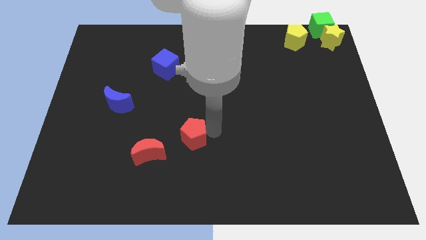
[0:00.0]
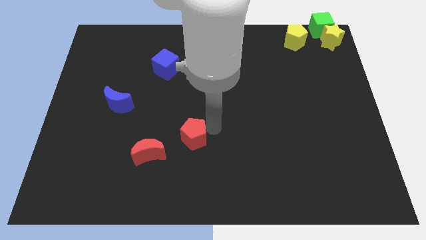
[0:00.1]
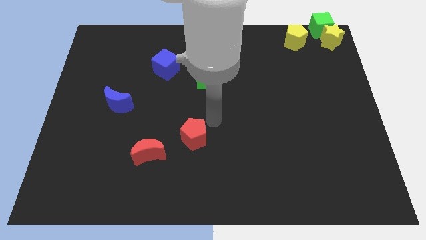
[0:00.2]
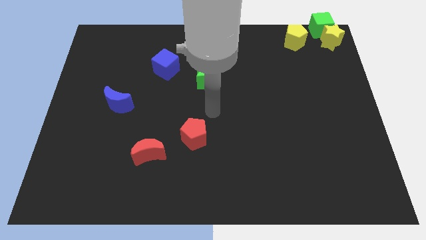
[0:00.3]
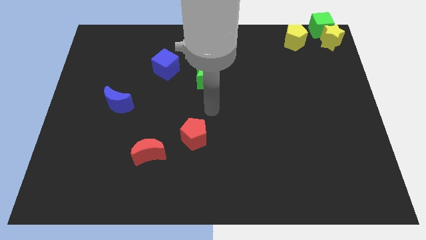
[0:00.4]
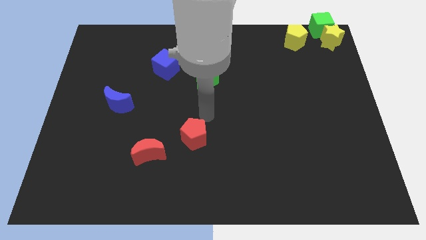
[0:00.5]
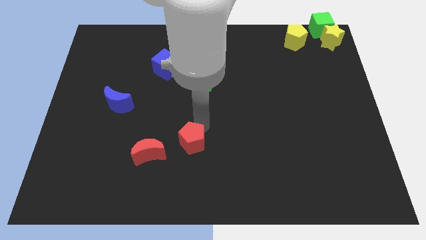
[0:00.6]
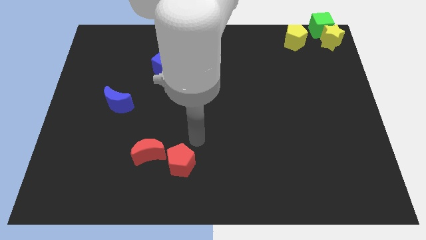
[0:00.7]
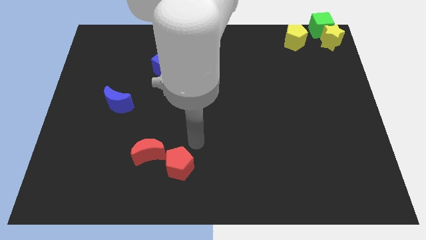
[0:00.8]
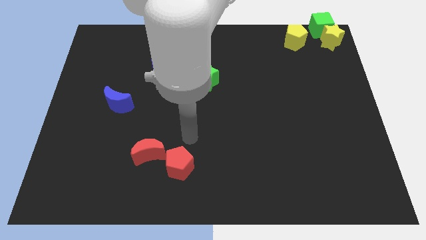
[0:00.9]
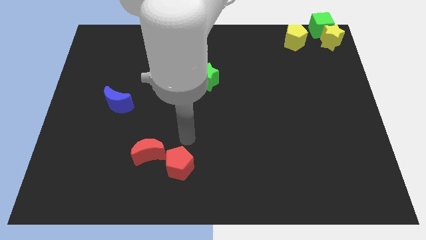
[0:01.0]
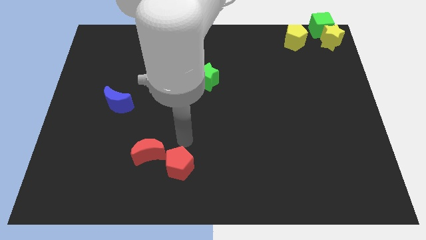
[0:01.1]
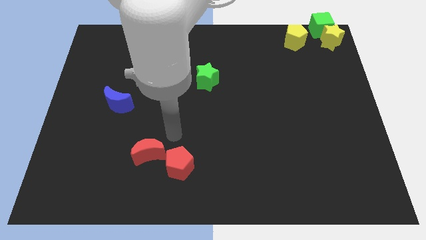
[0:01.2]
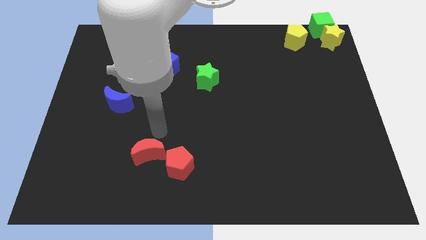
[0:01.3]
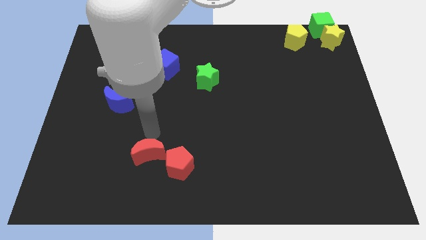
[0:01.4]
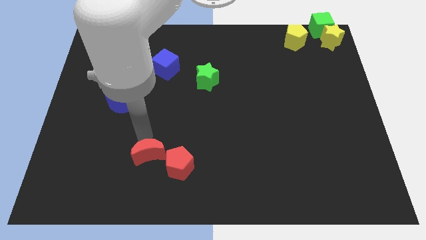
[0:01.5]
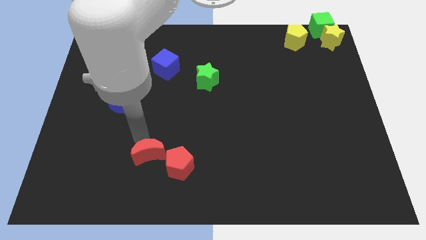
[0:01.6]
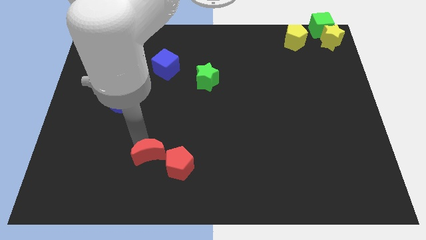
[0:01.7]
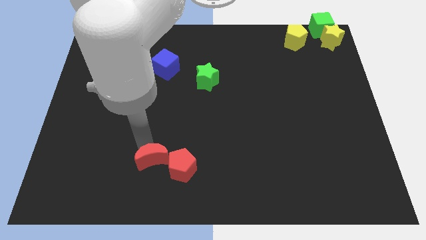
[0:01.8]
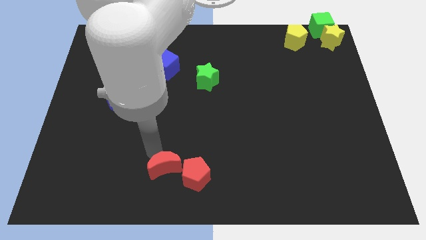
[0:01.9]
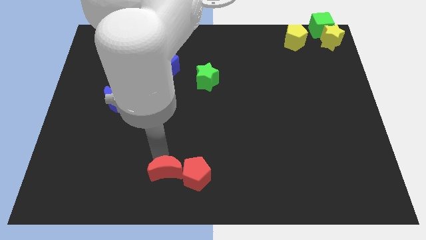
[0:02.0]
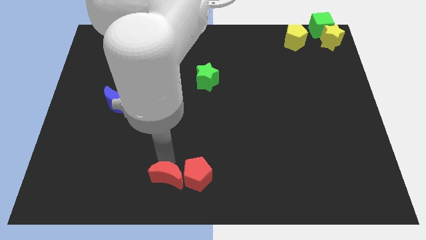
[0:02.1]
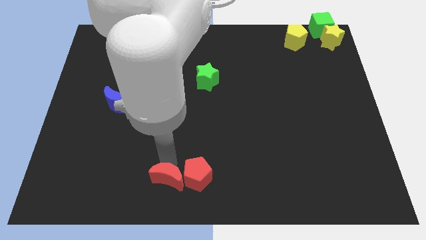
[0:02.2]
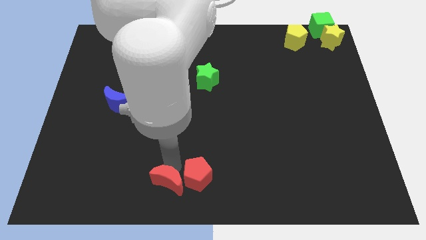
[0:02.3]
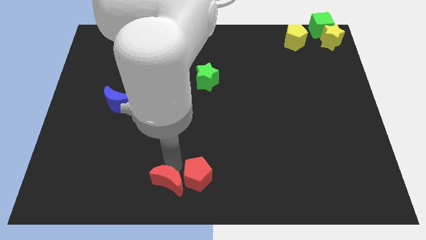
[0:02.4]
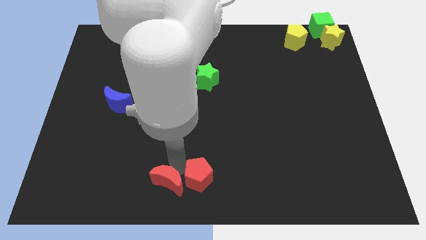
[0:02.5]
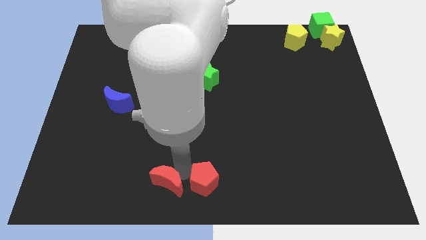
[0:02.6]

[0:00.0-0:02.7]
push red pentagon along with red crescent towards the bottom center of board

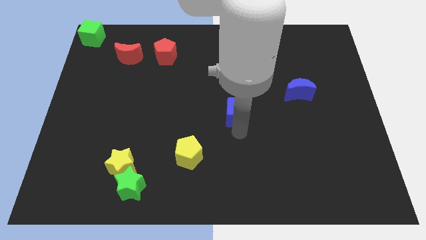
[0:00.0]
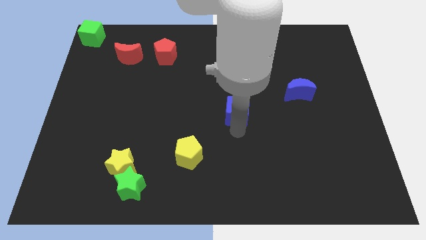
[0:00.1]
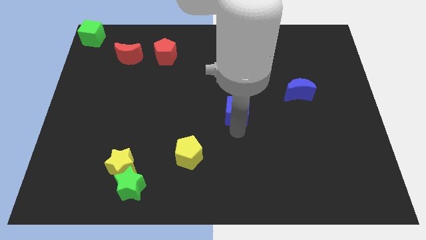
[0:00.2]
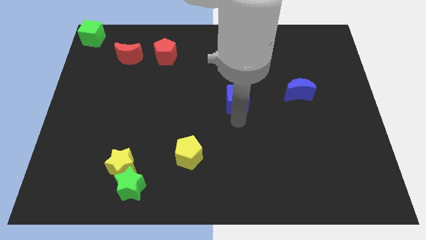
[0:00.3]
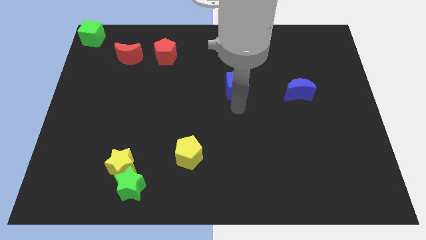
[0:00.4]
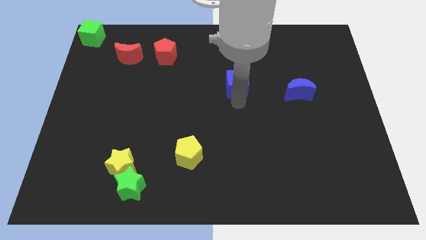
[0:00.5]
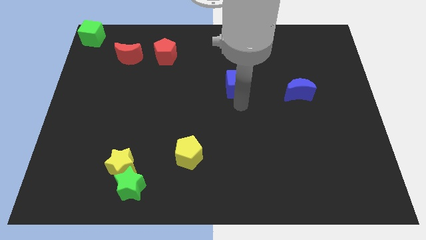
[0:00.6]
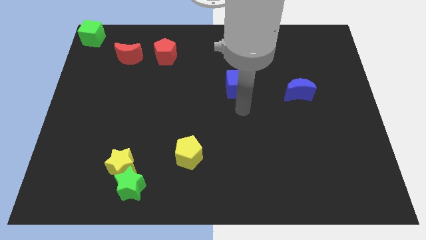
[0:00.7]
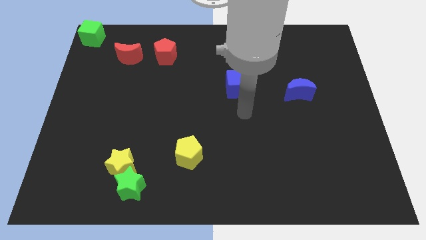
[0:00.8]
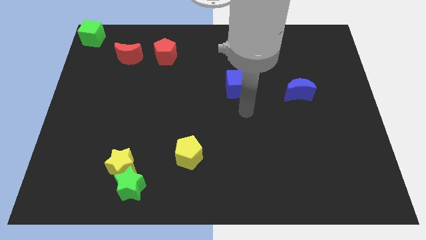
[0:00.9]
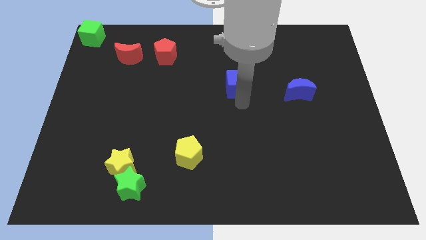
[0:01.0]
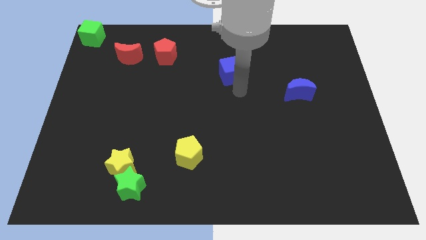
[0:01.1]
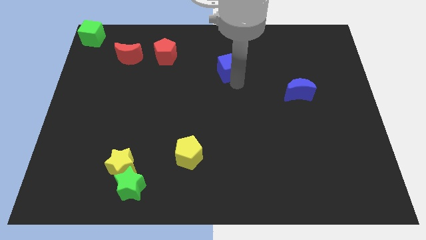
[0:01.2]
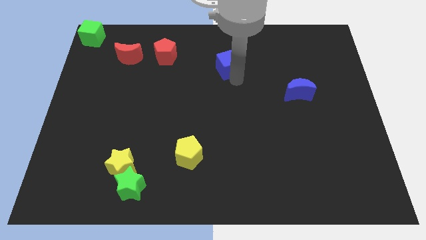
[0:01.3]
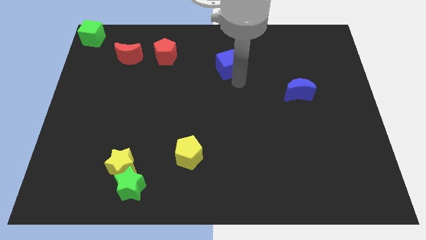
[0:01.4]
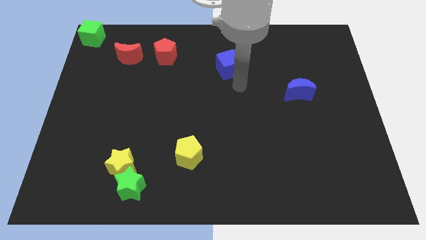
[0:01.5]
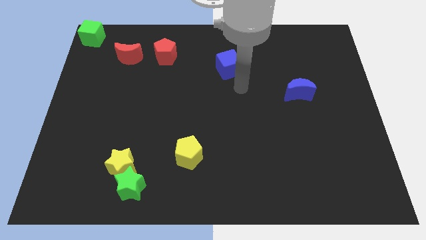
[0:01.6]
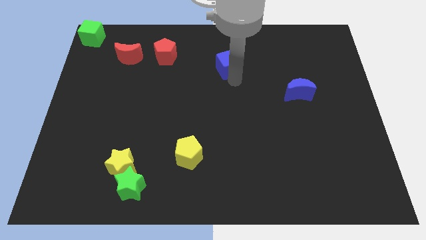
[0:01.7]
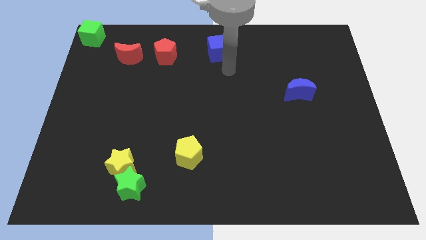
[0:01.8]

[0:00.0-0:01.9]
put the blue cube horizontally right to the red pentagon

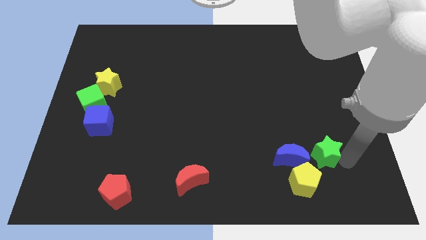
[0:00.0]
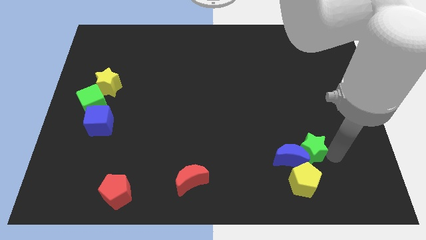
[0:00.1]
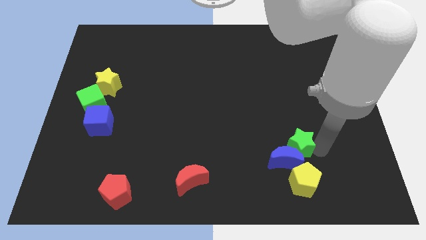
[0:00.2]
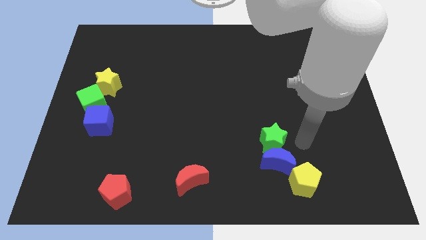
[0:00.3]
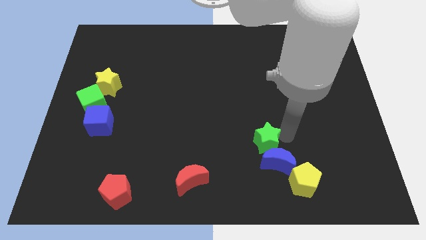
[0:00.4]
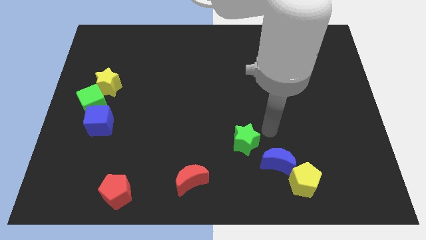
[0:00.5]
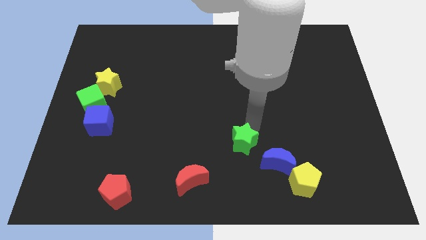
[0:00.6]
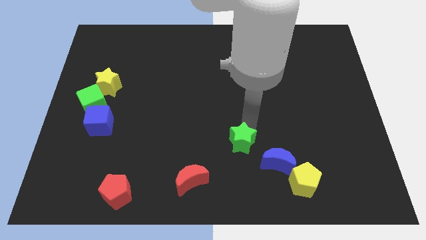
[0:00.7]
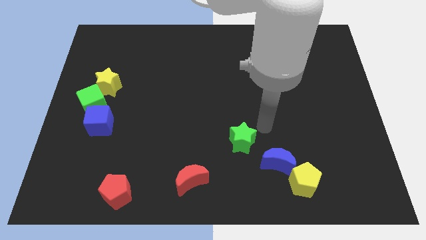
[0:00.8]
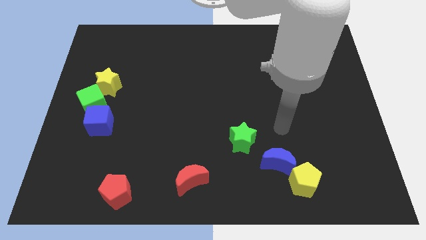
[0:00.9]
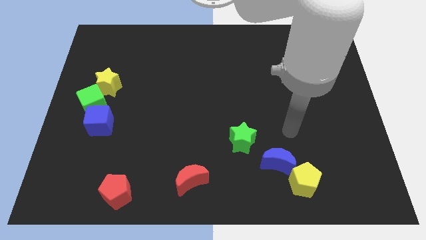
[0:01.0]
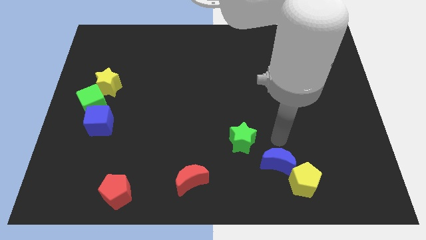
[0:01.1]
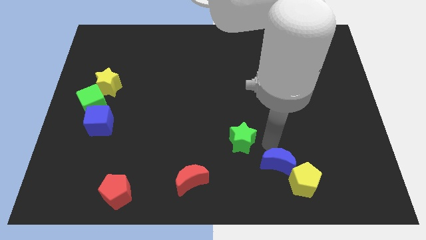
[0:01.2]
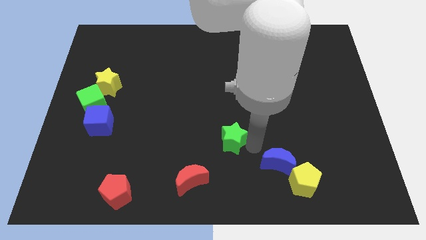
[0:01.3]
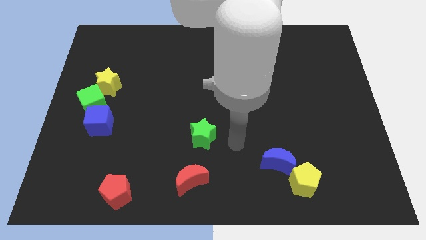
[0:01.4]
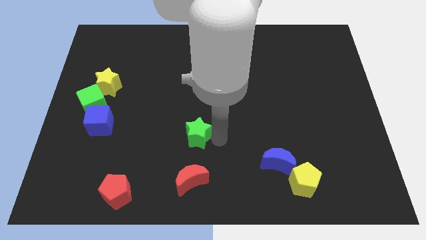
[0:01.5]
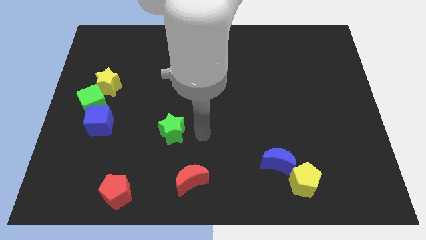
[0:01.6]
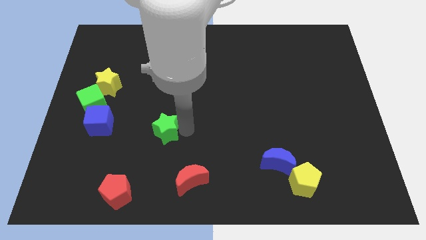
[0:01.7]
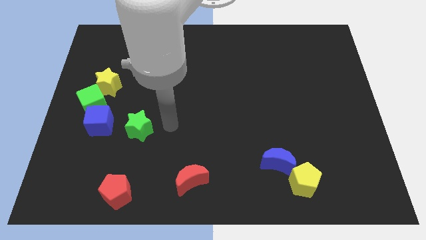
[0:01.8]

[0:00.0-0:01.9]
push the green star right to the blue cube

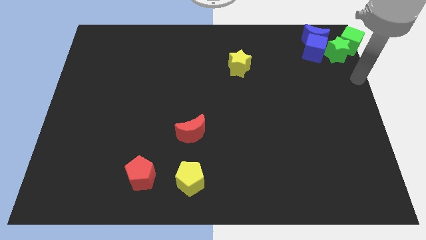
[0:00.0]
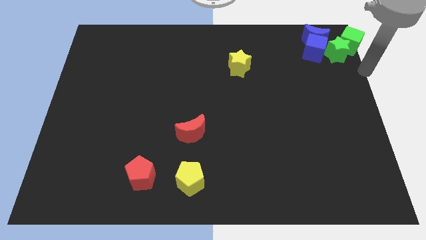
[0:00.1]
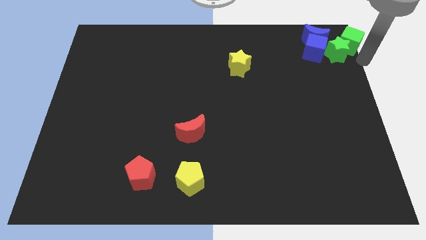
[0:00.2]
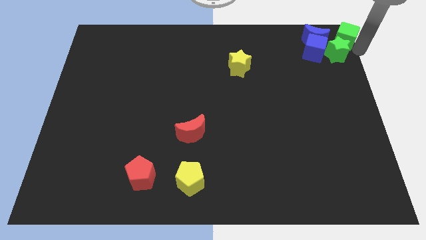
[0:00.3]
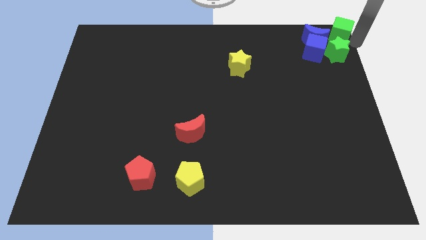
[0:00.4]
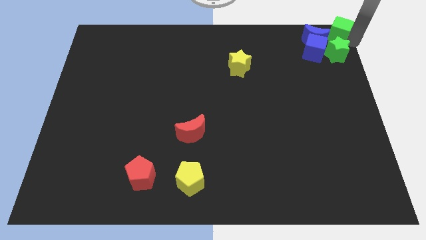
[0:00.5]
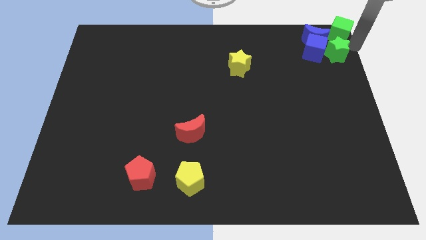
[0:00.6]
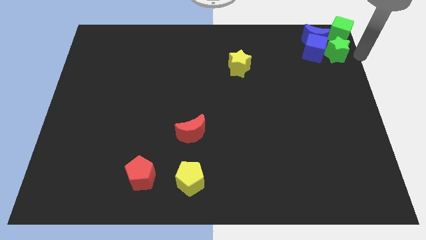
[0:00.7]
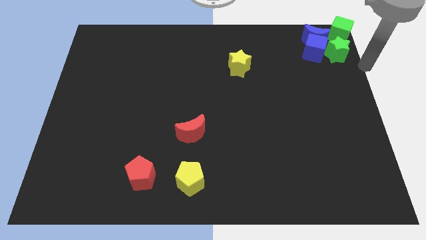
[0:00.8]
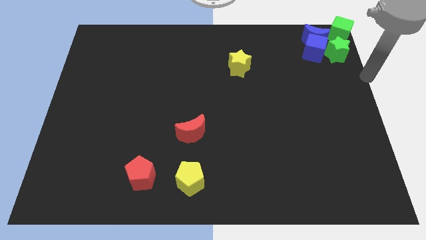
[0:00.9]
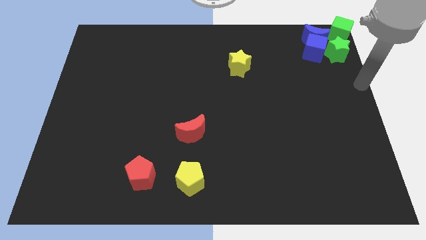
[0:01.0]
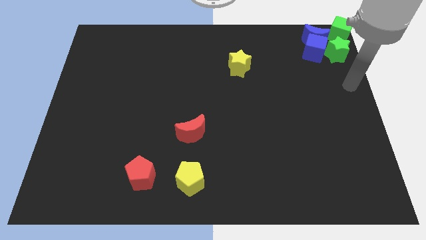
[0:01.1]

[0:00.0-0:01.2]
place the green cube at the top right corner of the board

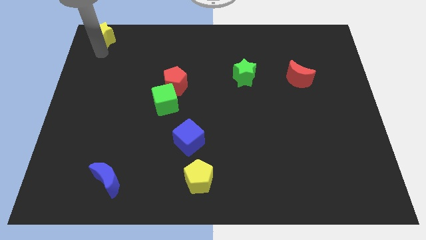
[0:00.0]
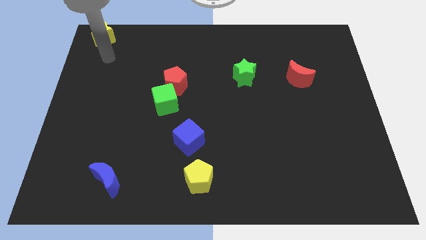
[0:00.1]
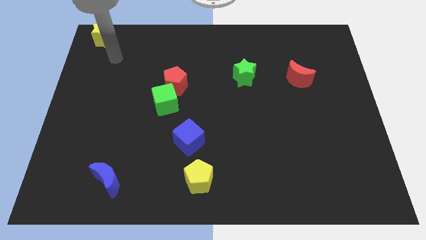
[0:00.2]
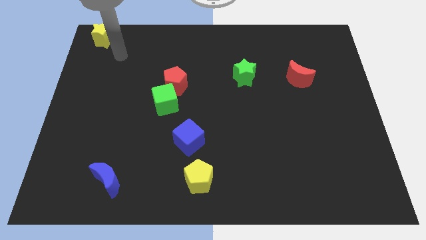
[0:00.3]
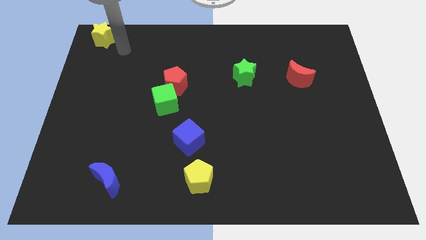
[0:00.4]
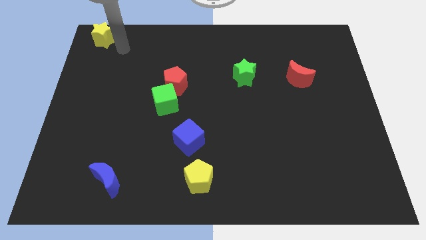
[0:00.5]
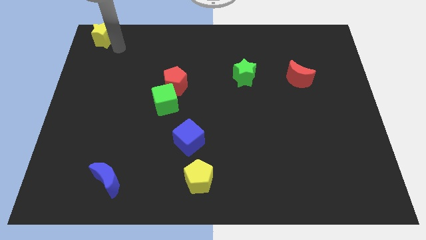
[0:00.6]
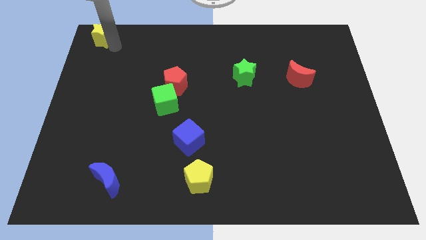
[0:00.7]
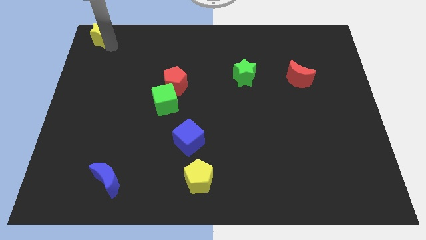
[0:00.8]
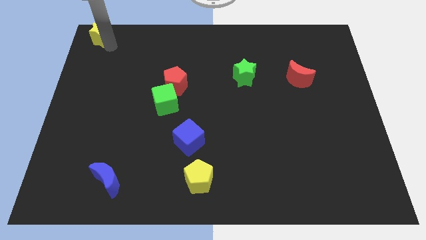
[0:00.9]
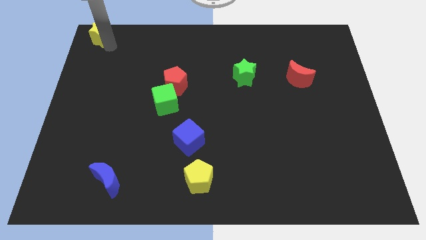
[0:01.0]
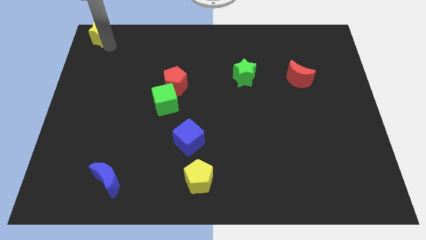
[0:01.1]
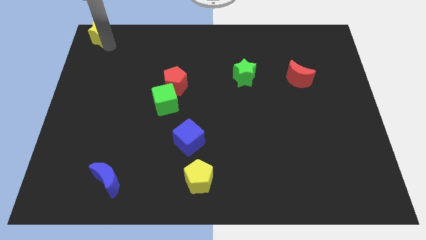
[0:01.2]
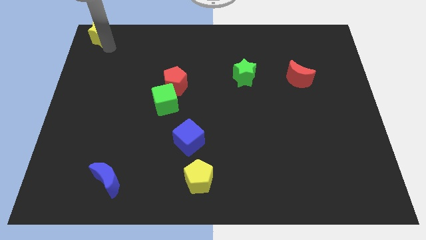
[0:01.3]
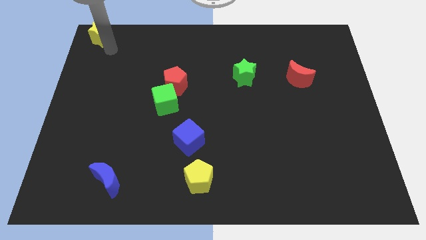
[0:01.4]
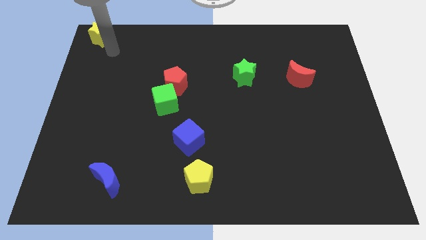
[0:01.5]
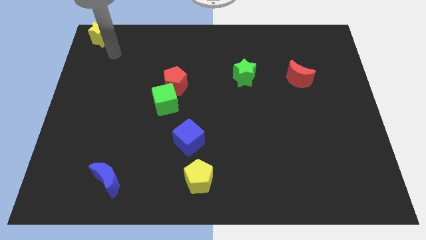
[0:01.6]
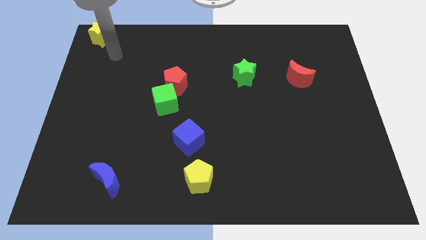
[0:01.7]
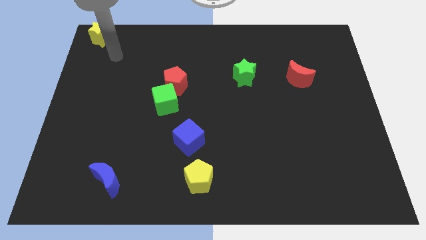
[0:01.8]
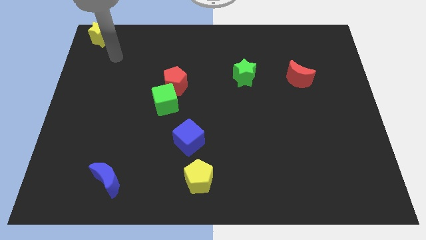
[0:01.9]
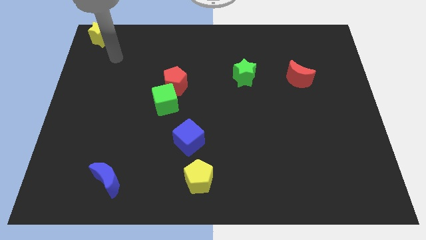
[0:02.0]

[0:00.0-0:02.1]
tap the yellow star
